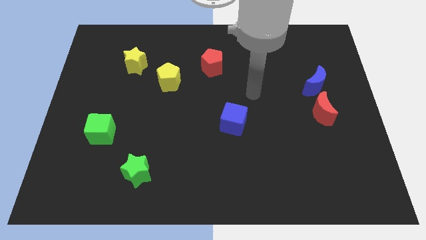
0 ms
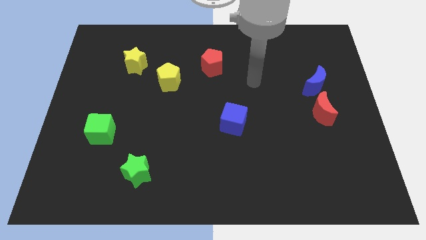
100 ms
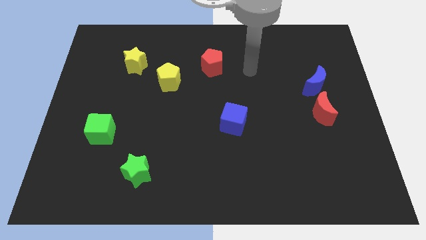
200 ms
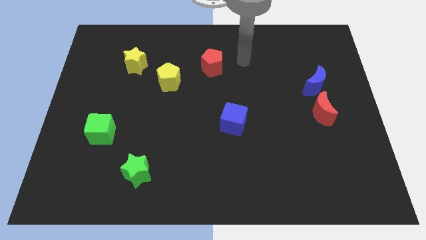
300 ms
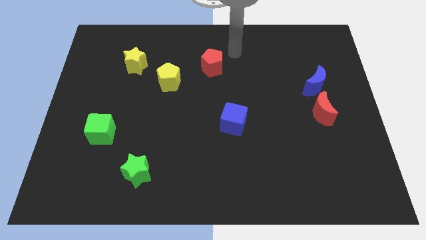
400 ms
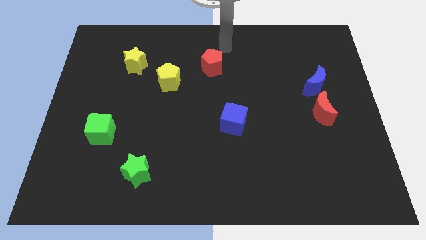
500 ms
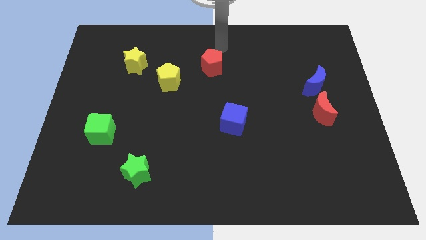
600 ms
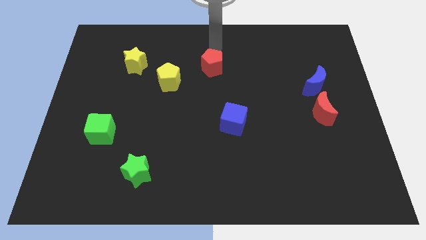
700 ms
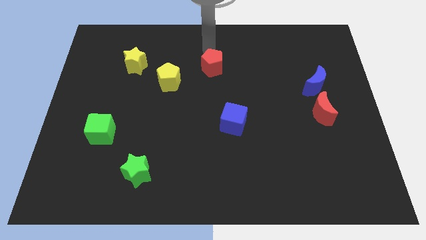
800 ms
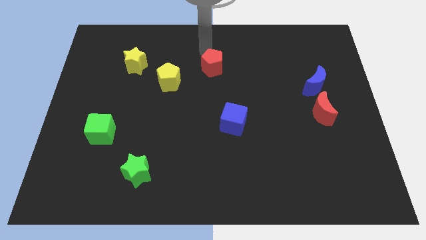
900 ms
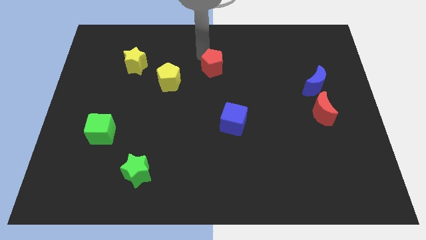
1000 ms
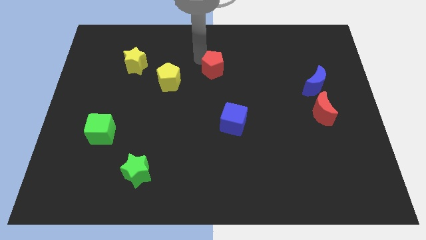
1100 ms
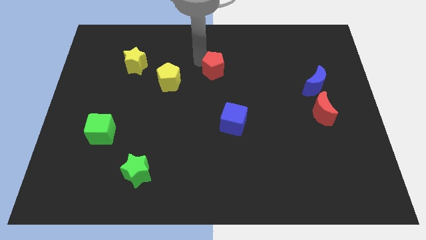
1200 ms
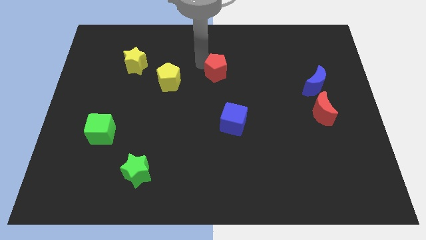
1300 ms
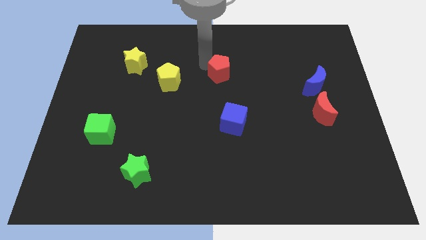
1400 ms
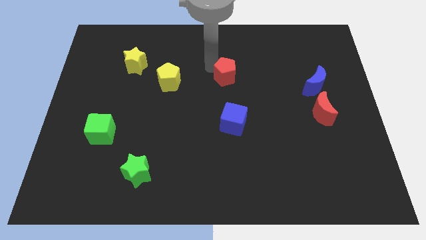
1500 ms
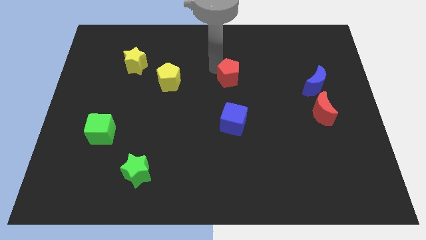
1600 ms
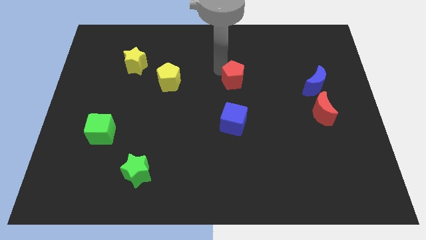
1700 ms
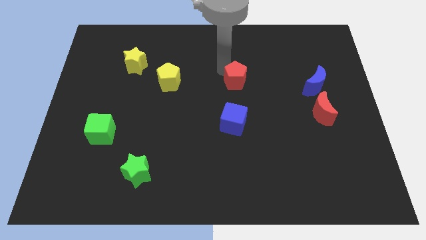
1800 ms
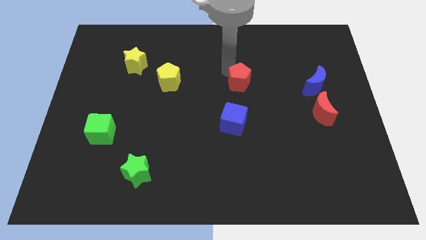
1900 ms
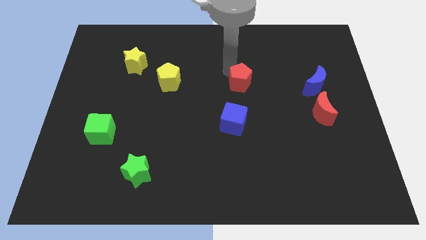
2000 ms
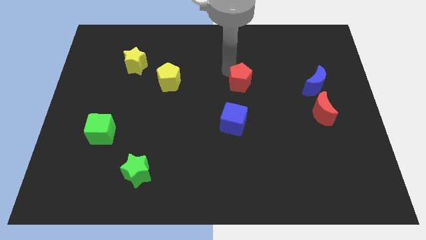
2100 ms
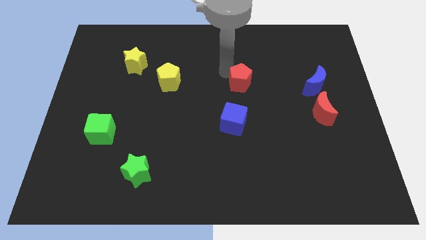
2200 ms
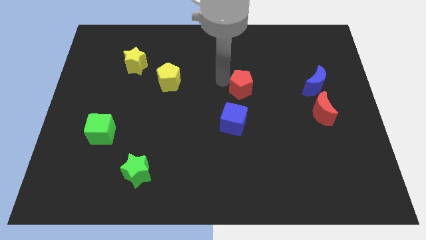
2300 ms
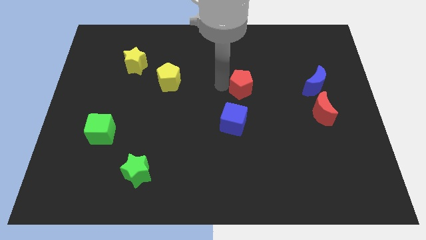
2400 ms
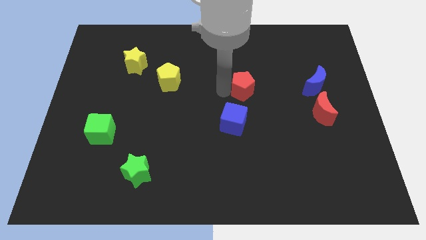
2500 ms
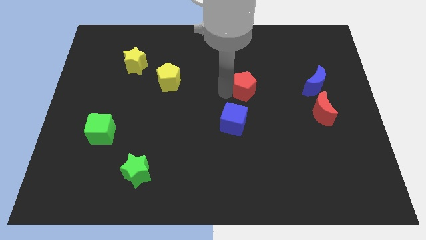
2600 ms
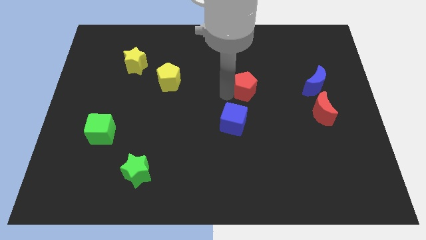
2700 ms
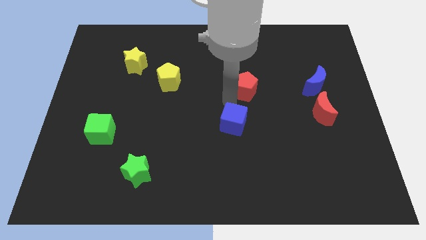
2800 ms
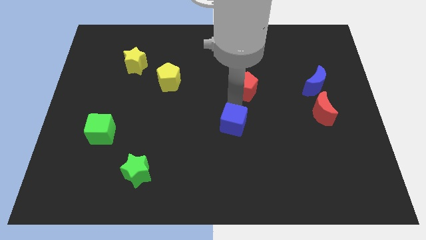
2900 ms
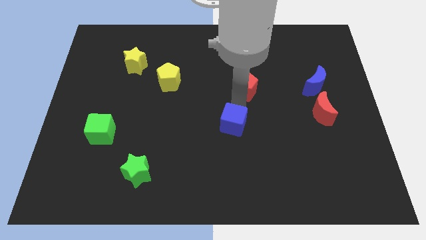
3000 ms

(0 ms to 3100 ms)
push the red pentagon to the top of the blue cube

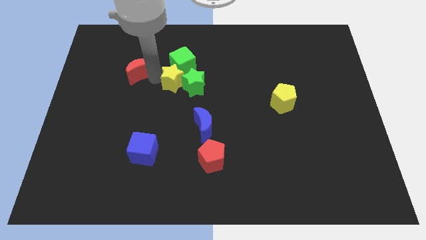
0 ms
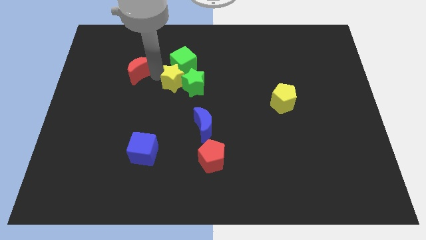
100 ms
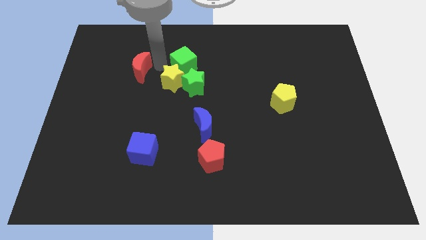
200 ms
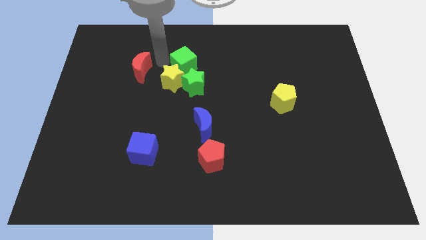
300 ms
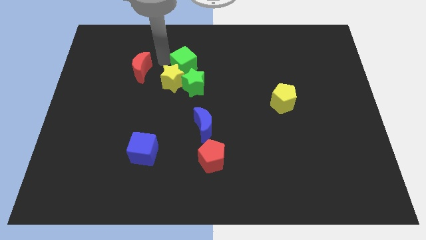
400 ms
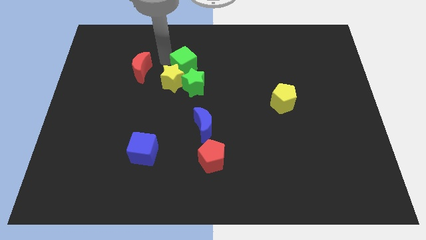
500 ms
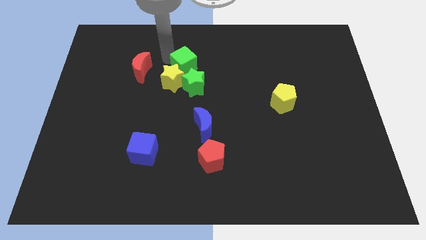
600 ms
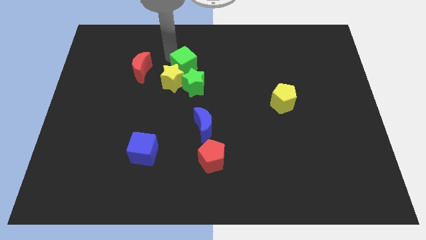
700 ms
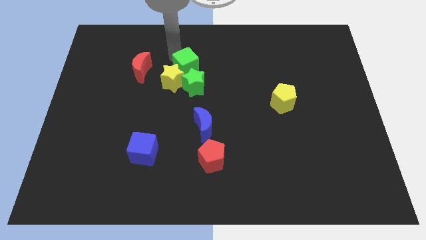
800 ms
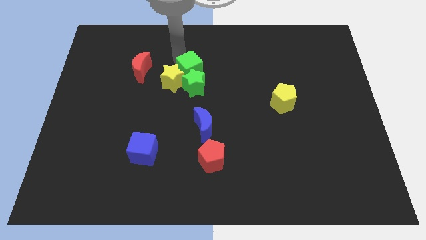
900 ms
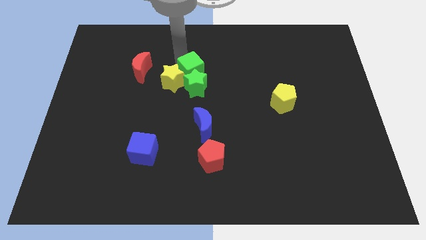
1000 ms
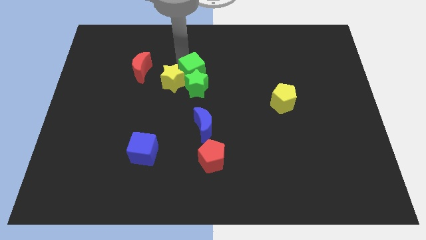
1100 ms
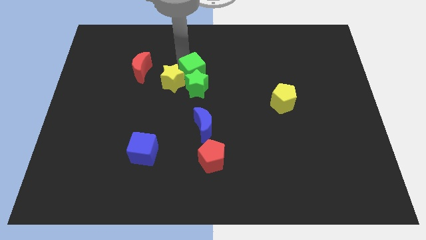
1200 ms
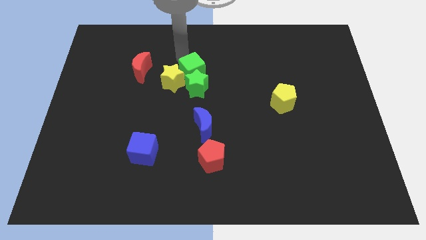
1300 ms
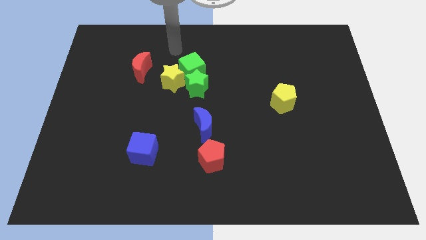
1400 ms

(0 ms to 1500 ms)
slide the green cube closer to the green star

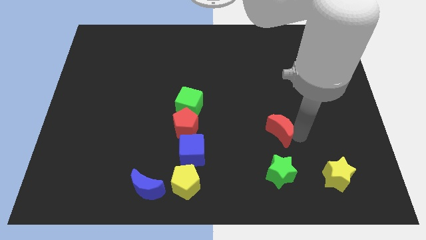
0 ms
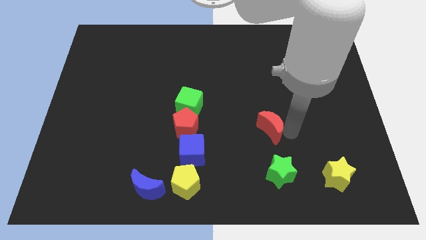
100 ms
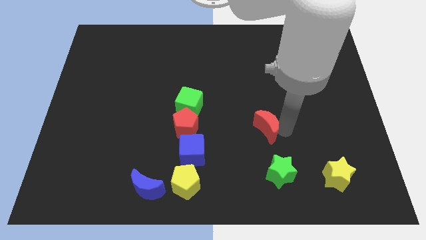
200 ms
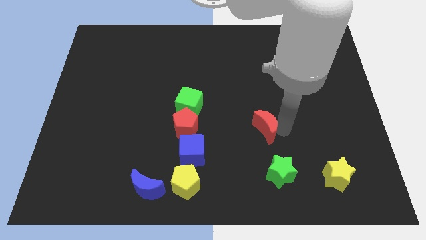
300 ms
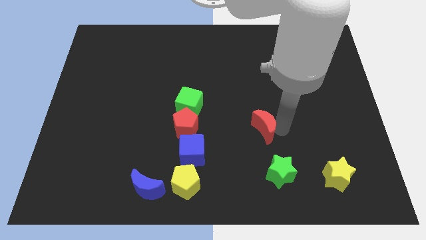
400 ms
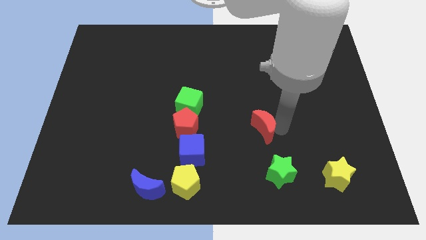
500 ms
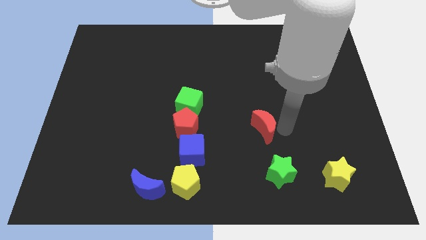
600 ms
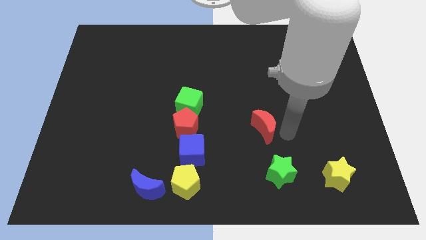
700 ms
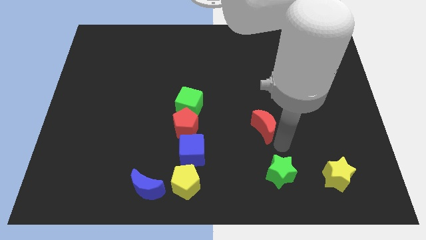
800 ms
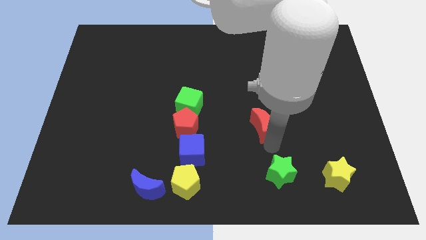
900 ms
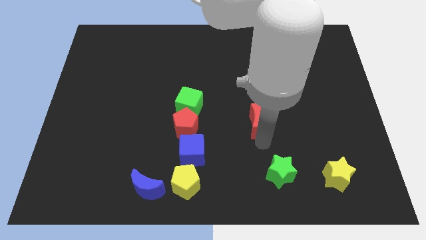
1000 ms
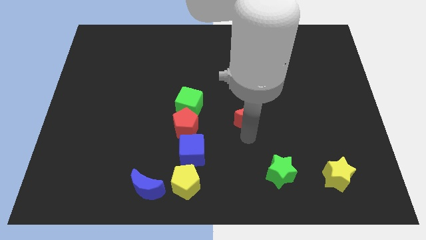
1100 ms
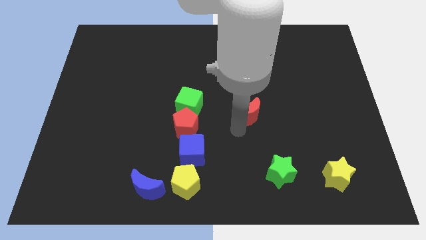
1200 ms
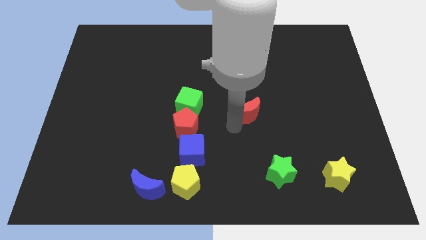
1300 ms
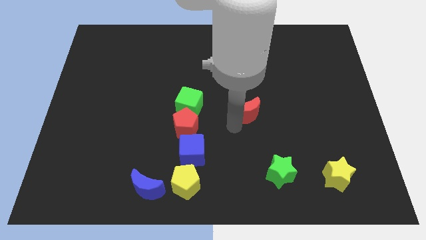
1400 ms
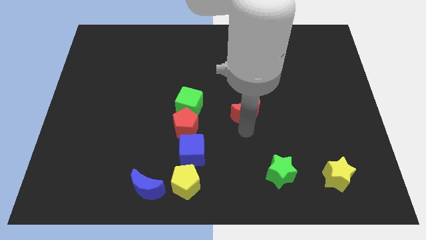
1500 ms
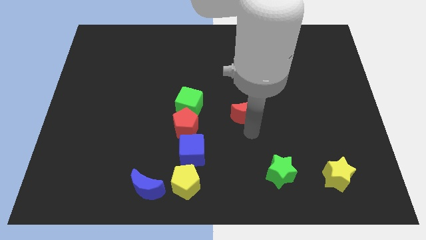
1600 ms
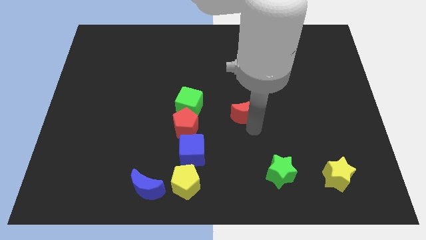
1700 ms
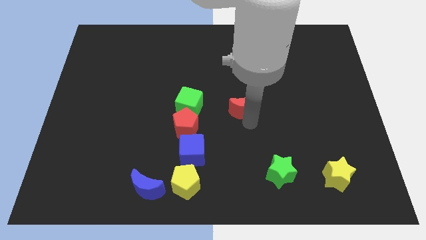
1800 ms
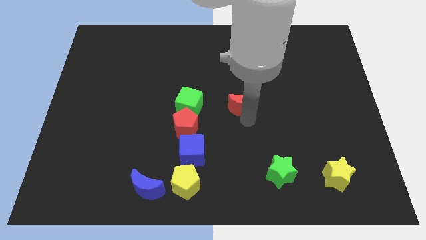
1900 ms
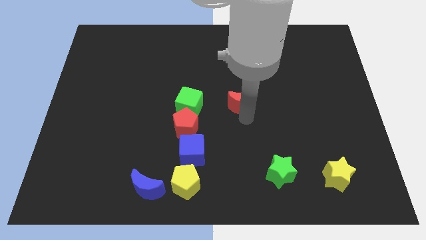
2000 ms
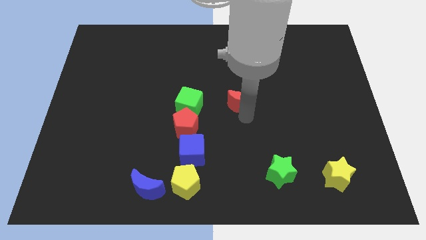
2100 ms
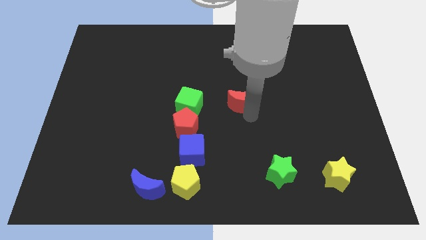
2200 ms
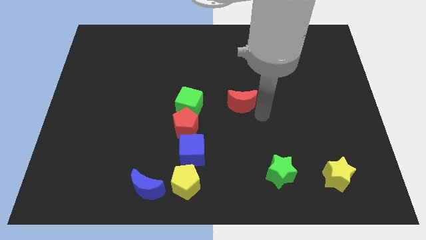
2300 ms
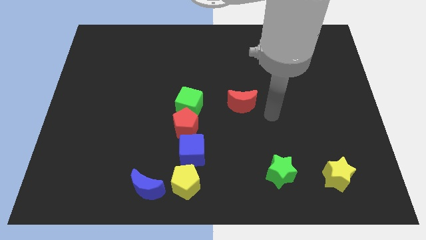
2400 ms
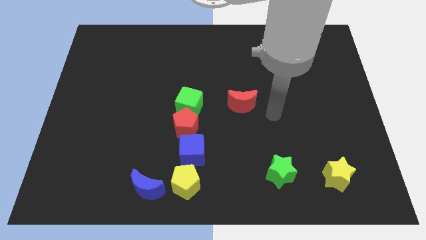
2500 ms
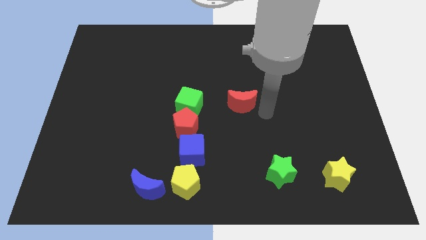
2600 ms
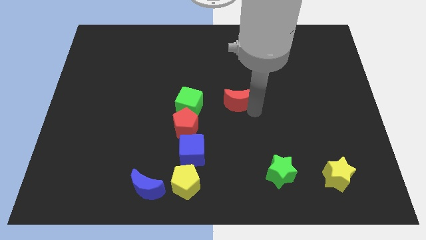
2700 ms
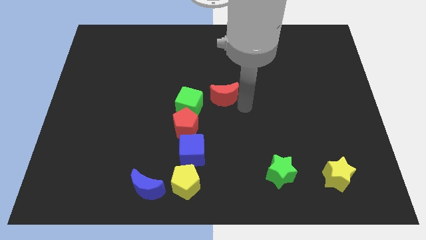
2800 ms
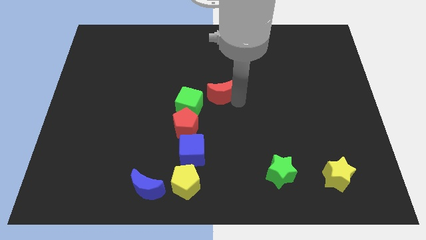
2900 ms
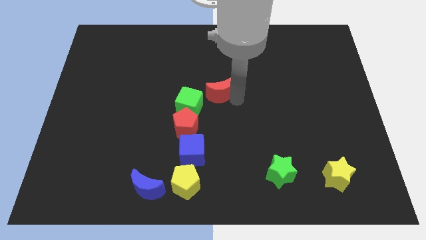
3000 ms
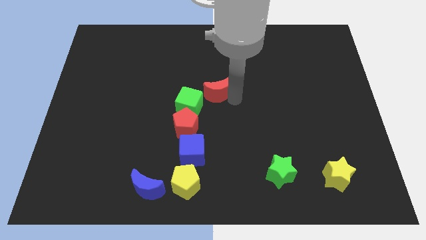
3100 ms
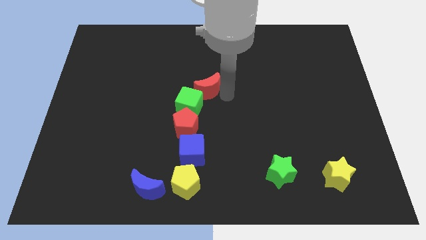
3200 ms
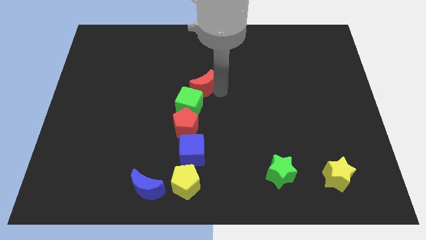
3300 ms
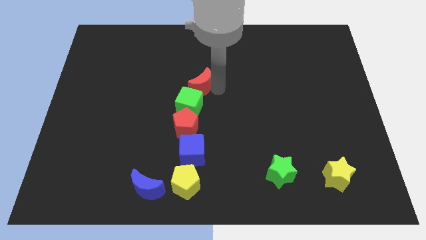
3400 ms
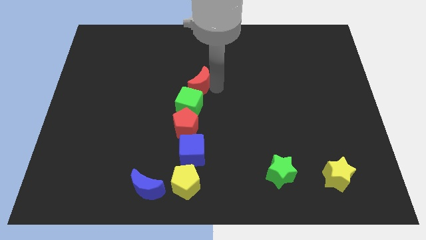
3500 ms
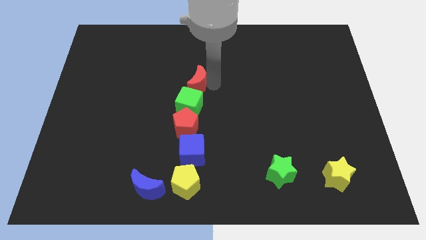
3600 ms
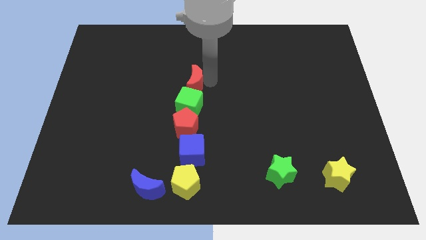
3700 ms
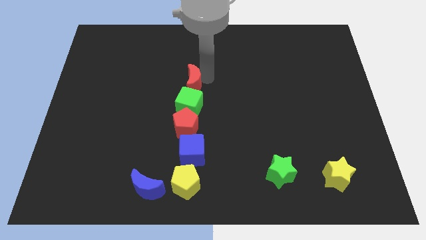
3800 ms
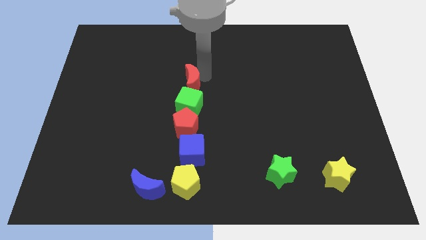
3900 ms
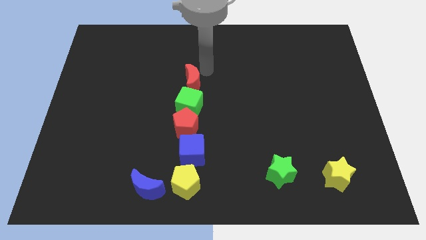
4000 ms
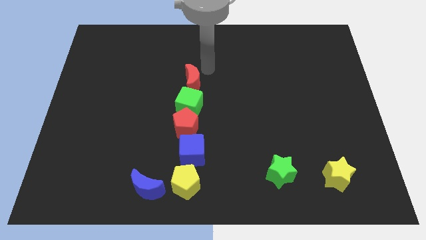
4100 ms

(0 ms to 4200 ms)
place red crescent above green cube

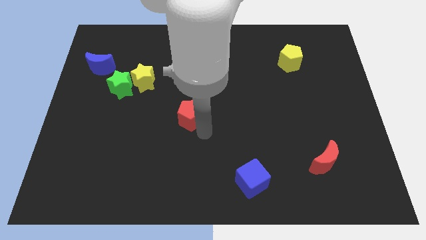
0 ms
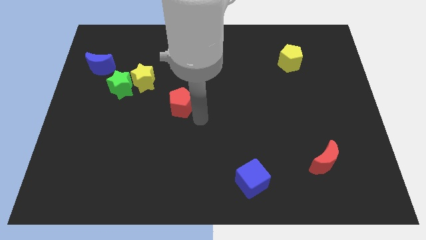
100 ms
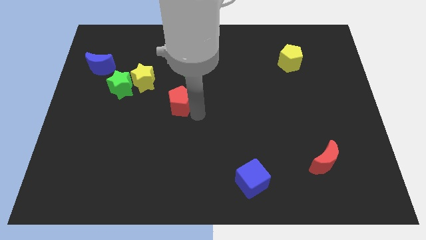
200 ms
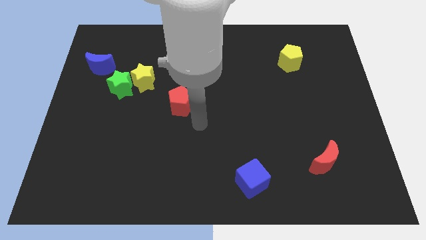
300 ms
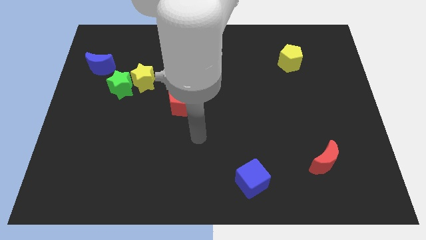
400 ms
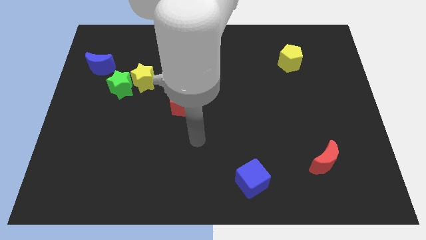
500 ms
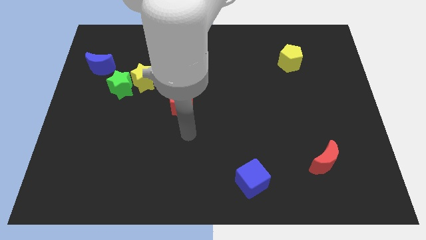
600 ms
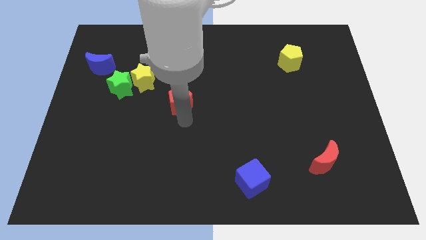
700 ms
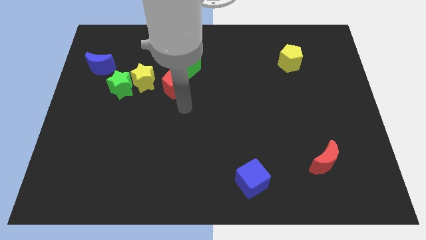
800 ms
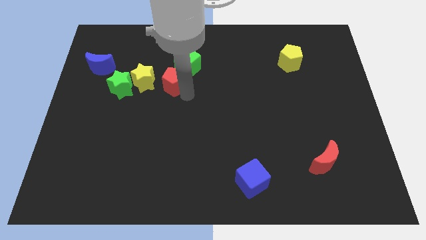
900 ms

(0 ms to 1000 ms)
push the red pentagon to the bottom left of the green cube
